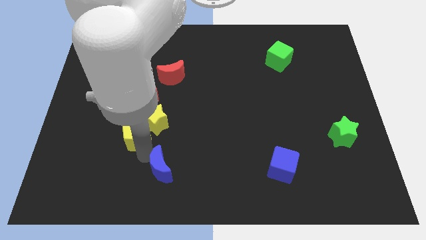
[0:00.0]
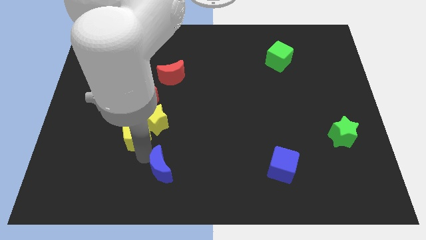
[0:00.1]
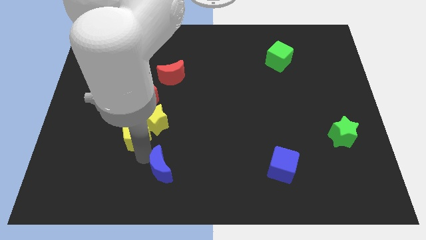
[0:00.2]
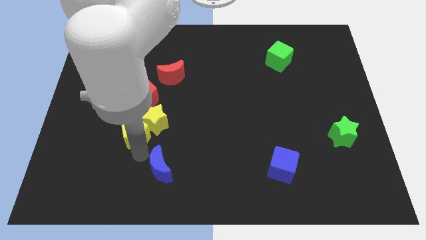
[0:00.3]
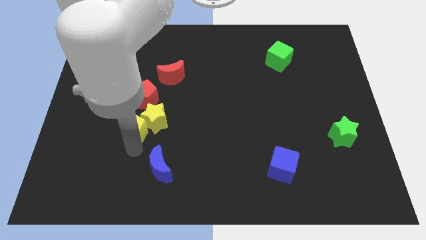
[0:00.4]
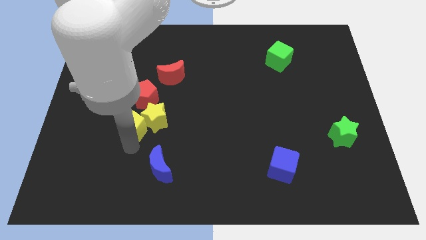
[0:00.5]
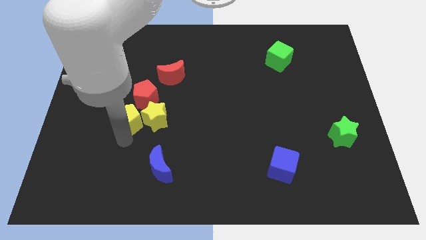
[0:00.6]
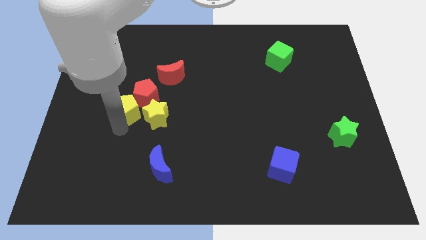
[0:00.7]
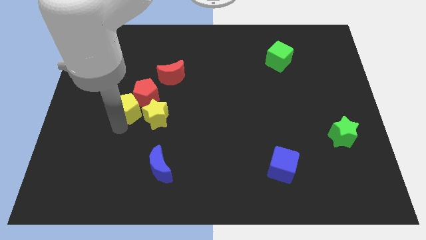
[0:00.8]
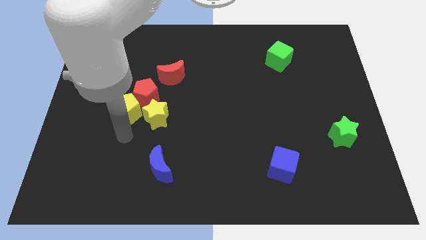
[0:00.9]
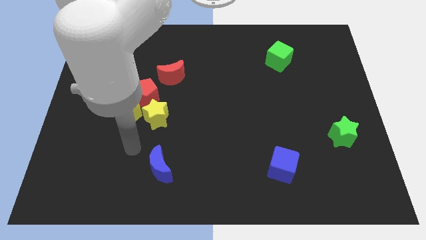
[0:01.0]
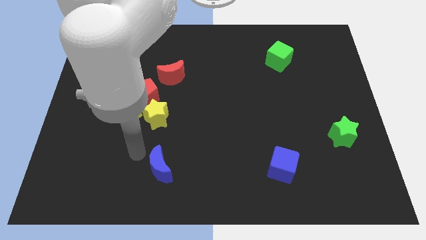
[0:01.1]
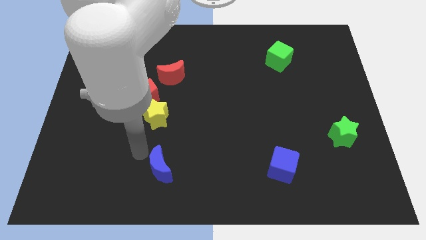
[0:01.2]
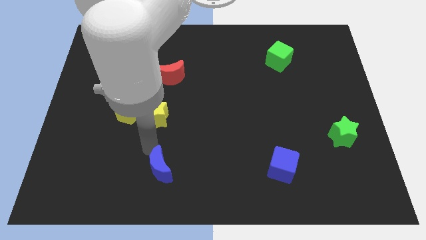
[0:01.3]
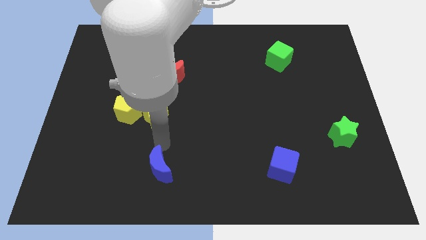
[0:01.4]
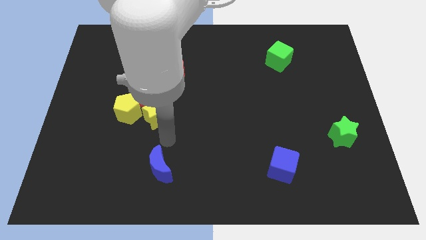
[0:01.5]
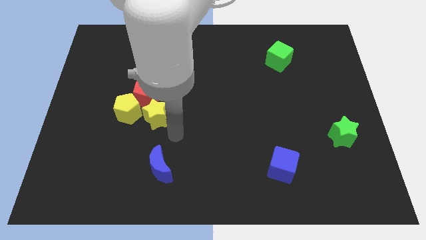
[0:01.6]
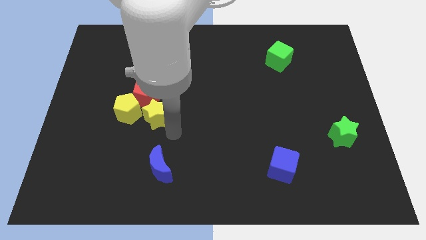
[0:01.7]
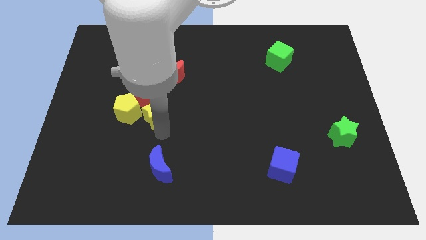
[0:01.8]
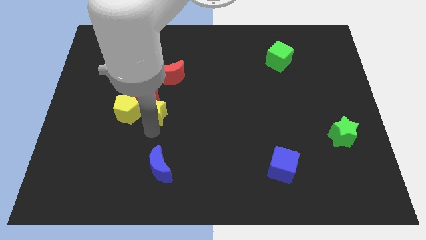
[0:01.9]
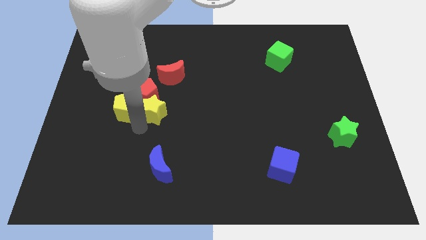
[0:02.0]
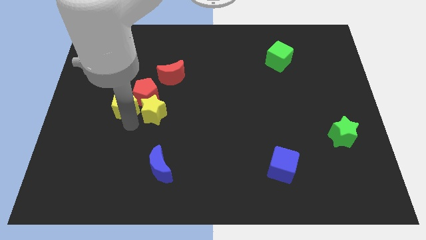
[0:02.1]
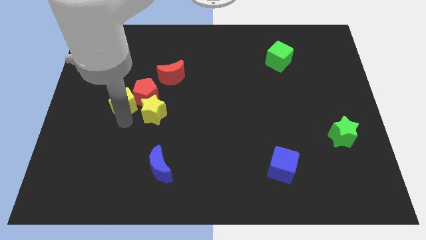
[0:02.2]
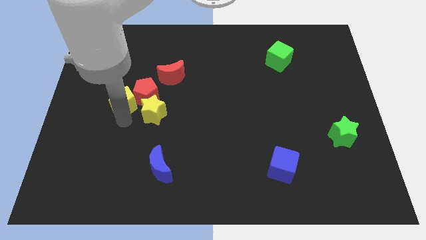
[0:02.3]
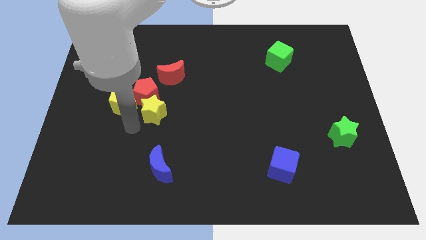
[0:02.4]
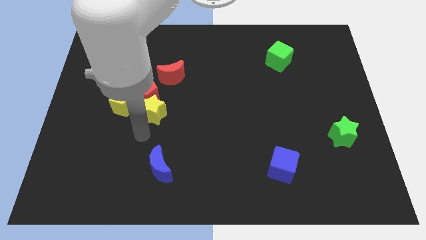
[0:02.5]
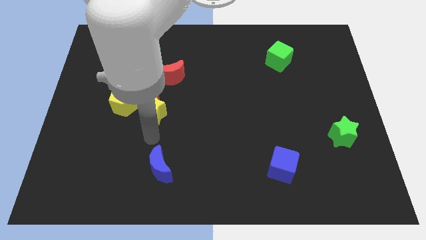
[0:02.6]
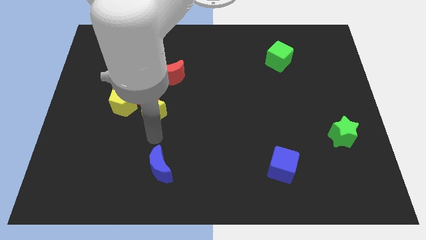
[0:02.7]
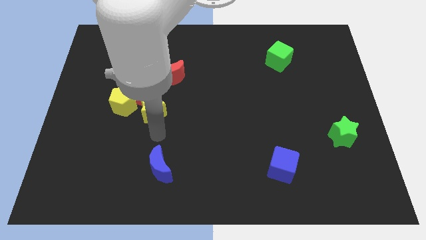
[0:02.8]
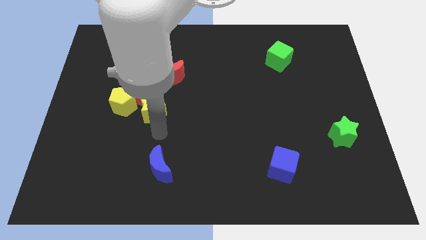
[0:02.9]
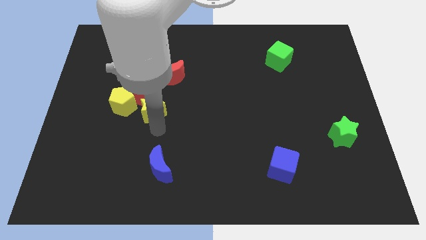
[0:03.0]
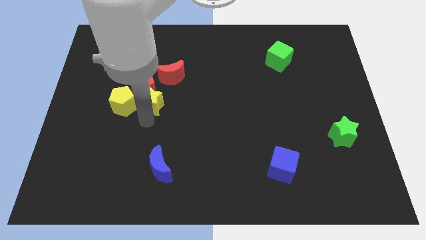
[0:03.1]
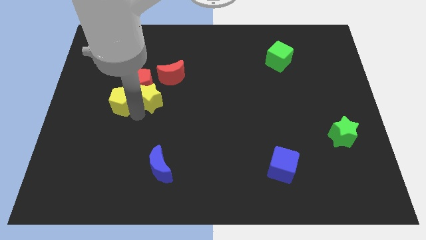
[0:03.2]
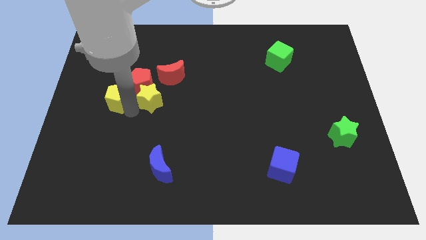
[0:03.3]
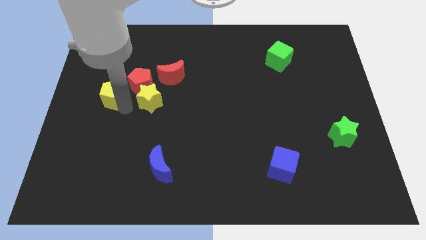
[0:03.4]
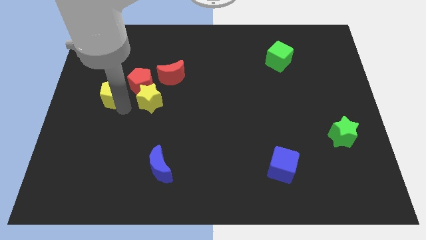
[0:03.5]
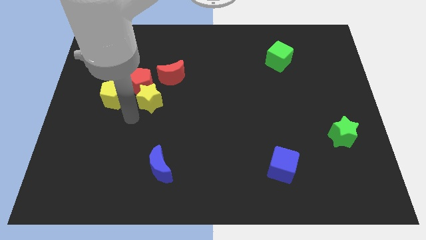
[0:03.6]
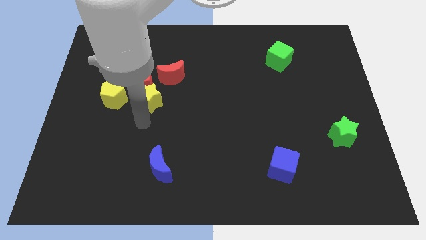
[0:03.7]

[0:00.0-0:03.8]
push the yellow pentagon diagonally at the bottom left of the red pentagon

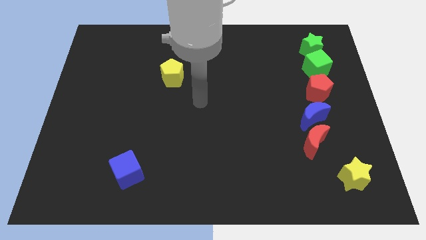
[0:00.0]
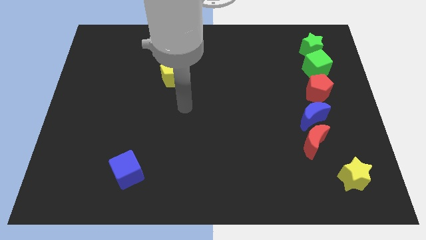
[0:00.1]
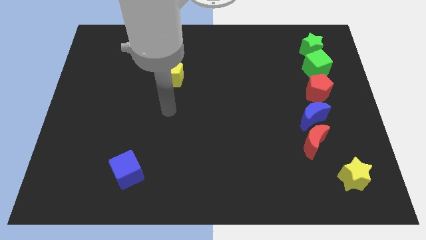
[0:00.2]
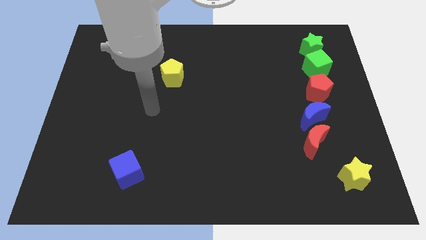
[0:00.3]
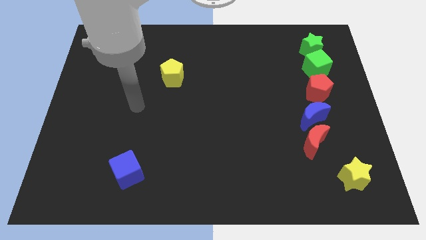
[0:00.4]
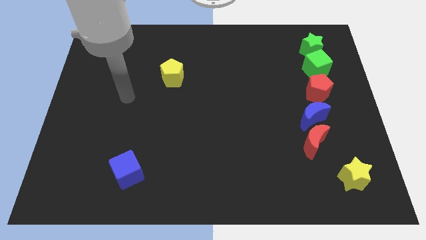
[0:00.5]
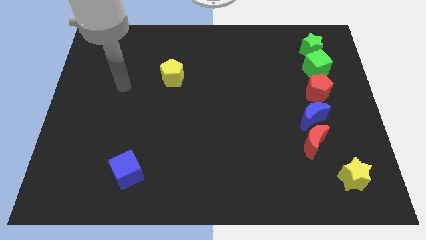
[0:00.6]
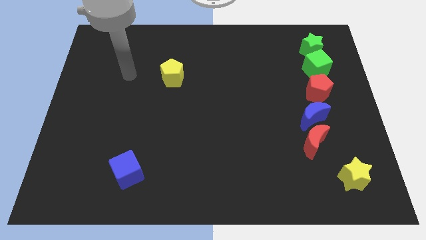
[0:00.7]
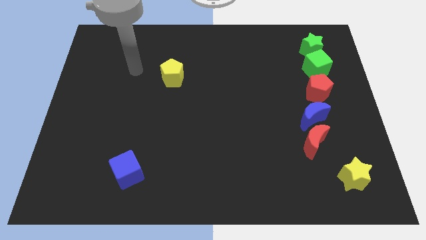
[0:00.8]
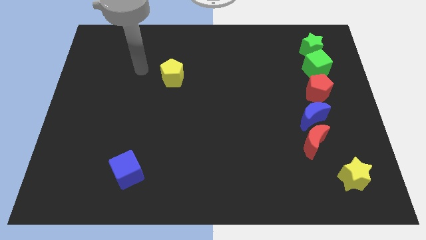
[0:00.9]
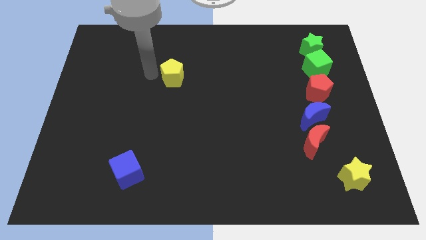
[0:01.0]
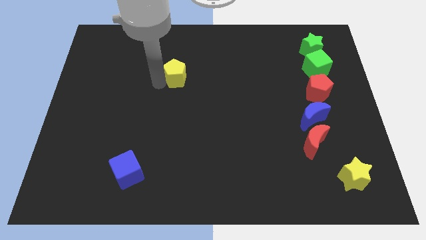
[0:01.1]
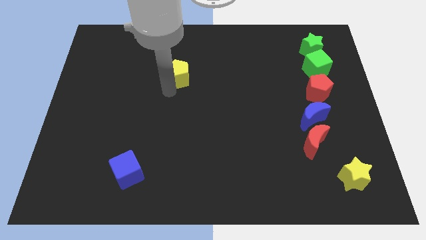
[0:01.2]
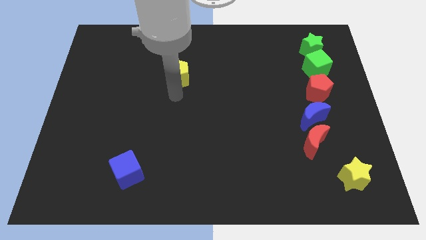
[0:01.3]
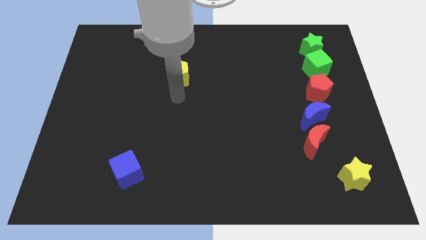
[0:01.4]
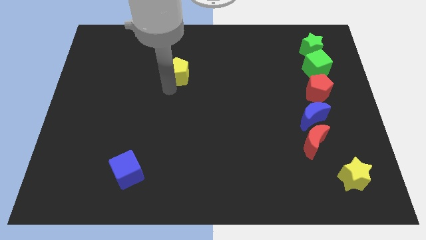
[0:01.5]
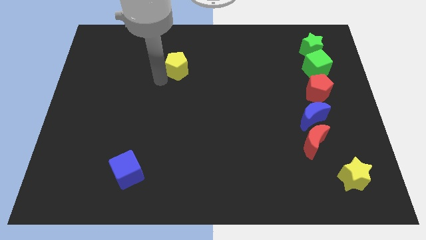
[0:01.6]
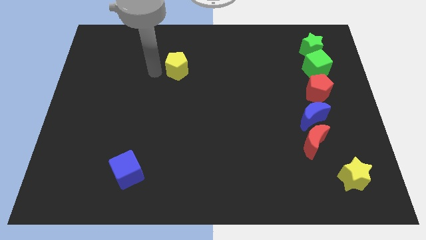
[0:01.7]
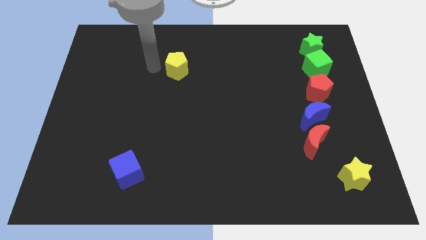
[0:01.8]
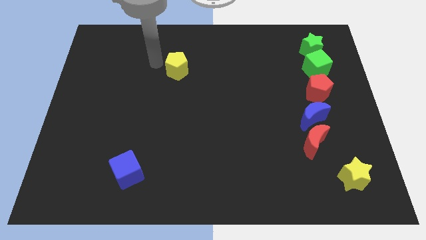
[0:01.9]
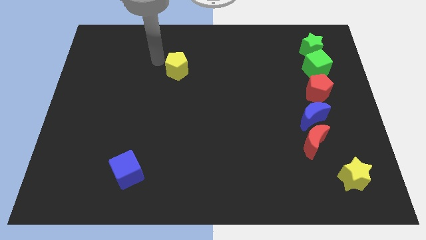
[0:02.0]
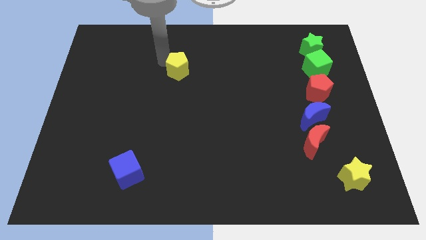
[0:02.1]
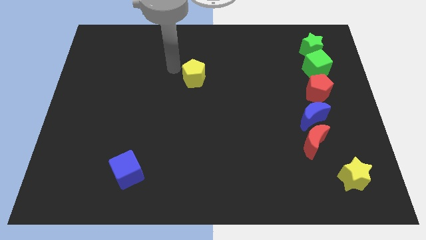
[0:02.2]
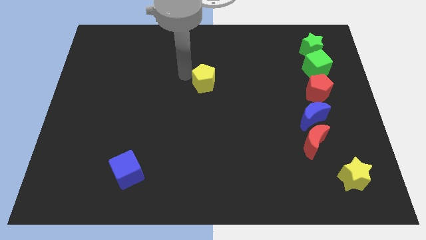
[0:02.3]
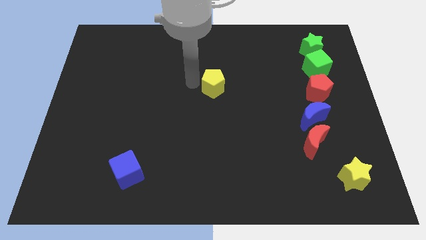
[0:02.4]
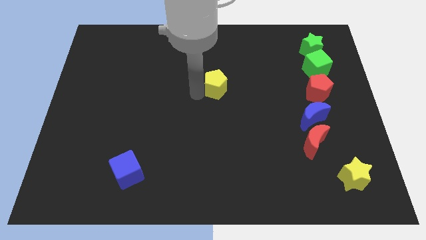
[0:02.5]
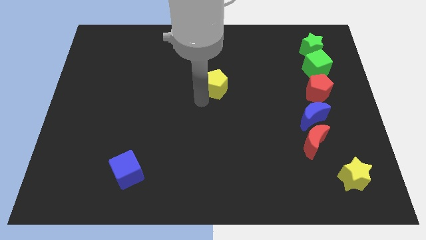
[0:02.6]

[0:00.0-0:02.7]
push the yellow block towards the center

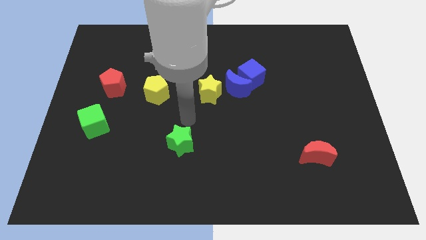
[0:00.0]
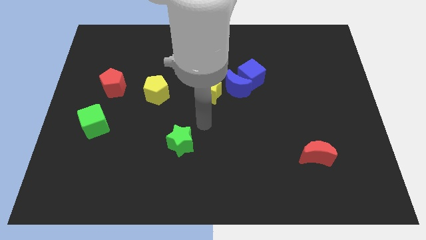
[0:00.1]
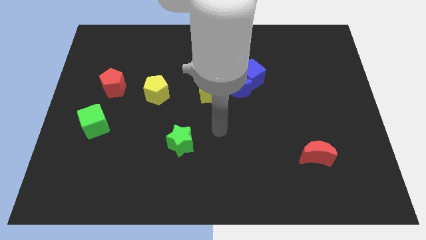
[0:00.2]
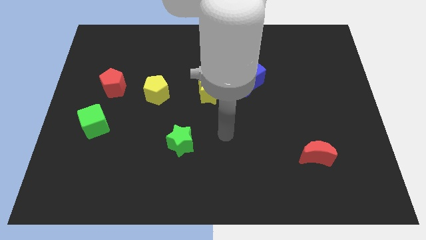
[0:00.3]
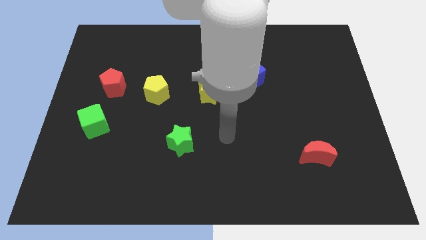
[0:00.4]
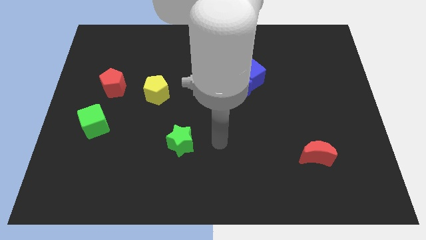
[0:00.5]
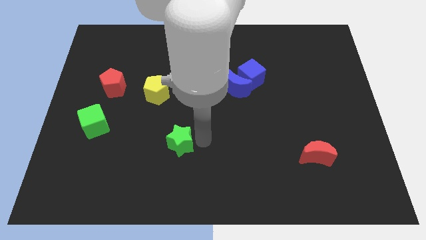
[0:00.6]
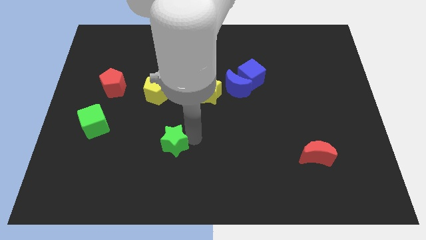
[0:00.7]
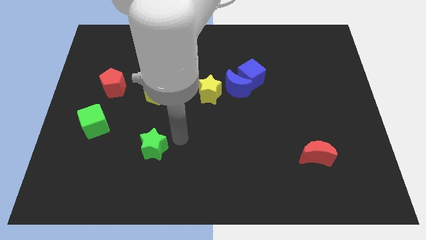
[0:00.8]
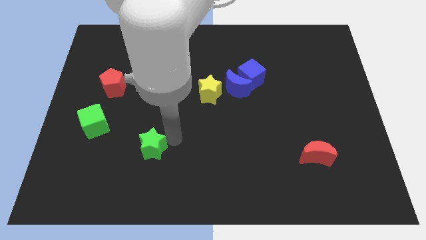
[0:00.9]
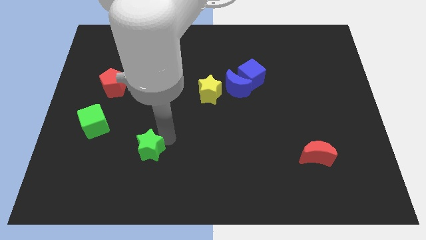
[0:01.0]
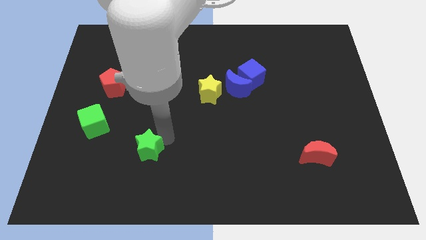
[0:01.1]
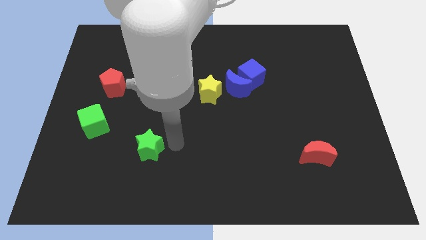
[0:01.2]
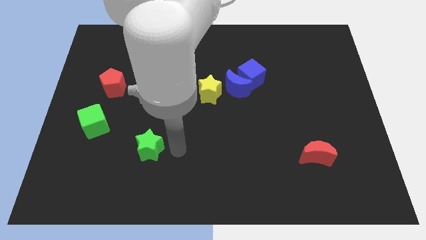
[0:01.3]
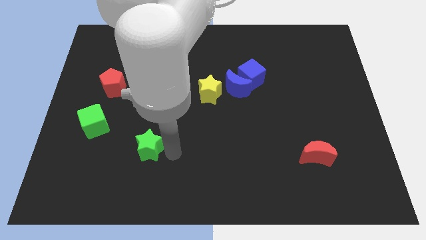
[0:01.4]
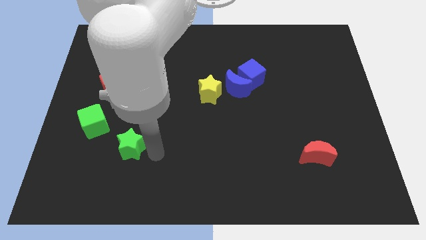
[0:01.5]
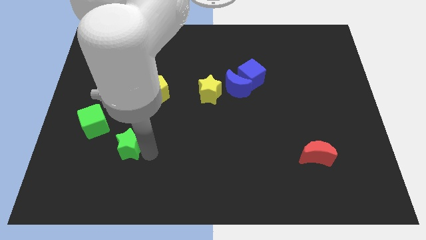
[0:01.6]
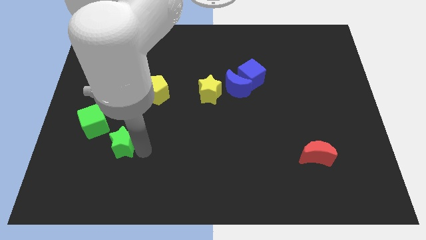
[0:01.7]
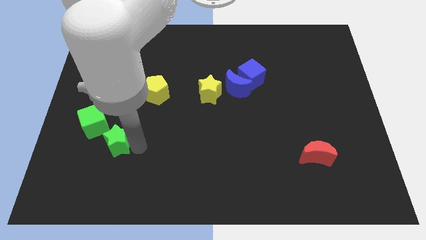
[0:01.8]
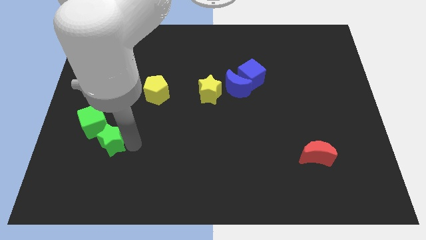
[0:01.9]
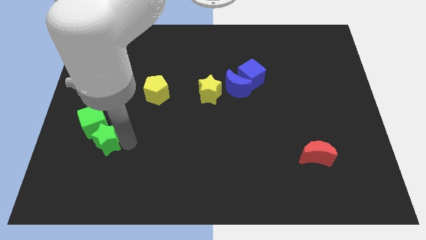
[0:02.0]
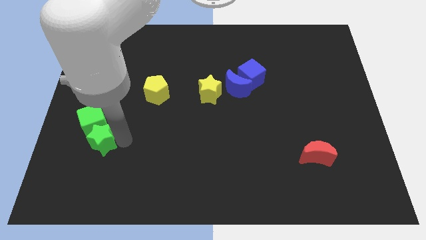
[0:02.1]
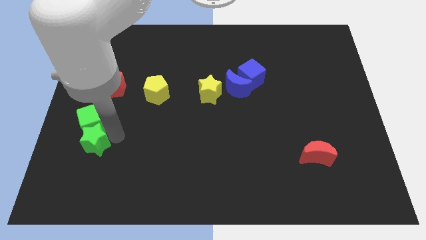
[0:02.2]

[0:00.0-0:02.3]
move the green star diagonal below the green cube

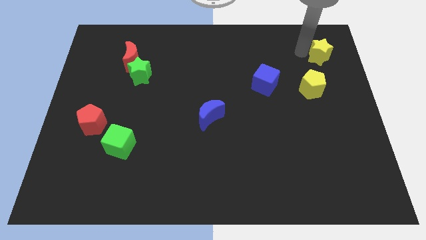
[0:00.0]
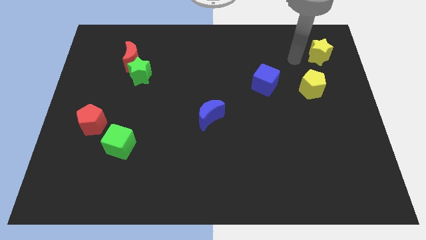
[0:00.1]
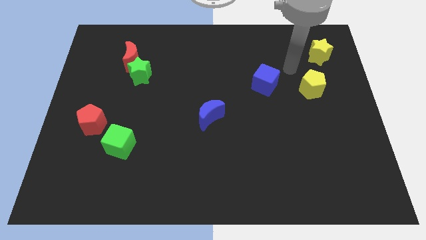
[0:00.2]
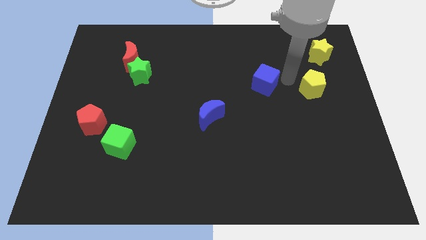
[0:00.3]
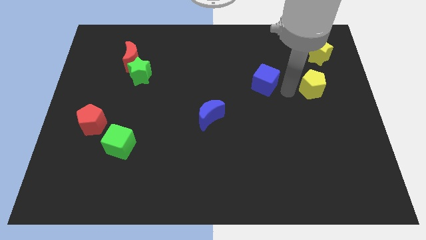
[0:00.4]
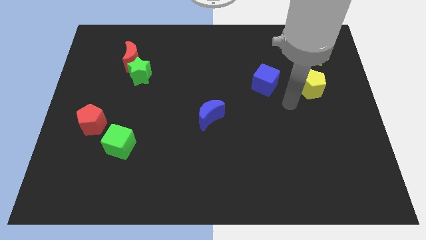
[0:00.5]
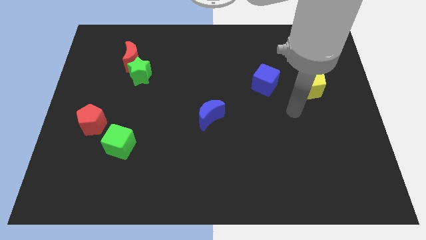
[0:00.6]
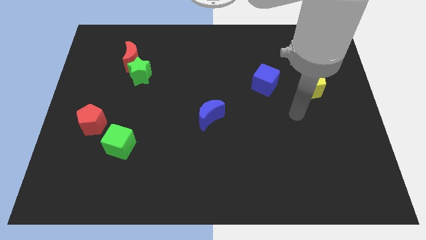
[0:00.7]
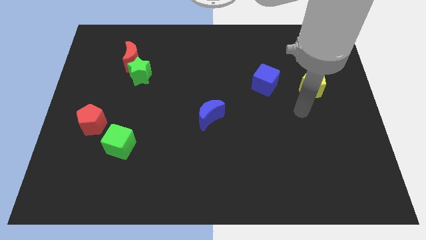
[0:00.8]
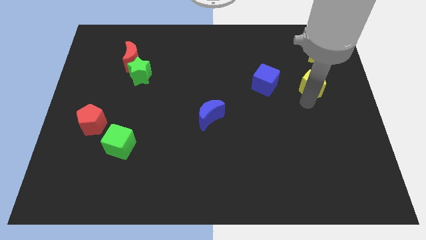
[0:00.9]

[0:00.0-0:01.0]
move your arm to the bottom of yellow pentagon
